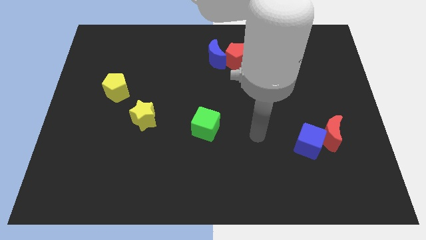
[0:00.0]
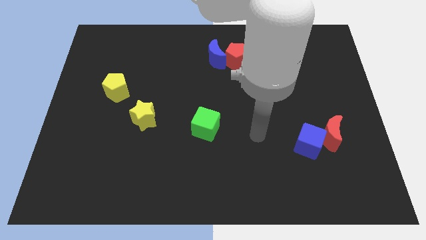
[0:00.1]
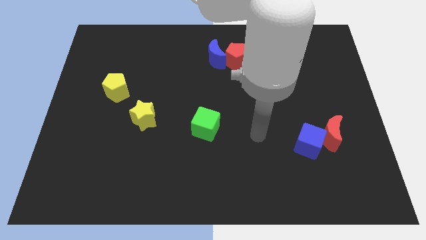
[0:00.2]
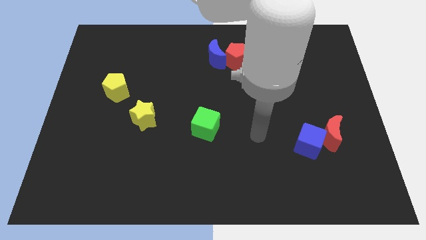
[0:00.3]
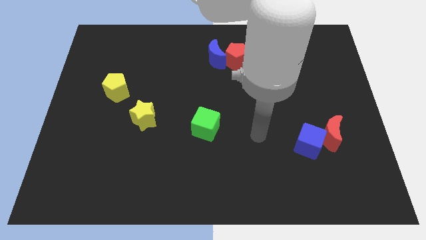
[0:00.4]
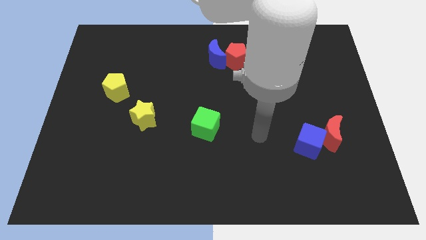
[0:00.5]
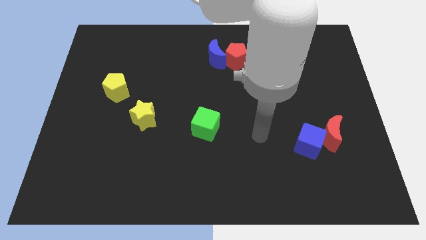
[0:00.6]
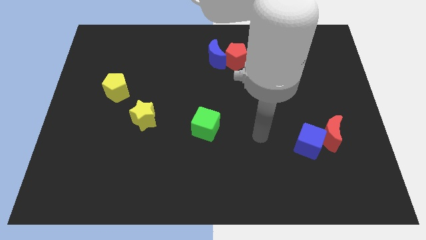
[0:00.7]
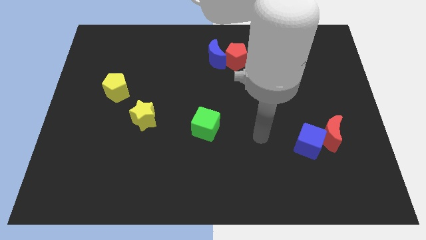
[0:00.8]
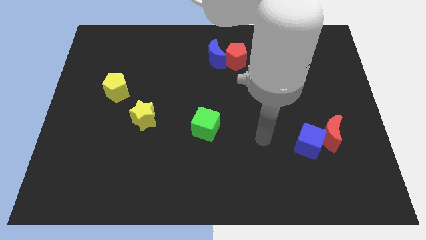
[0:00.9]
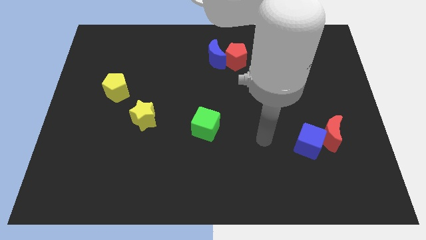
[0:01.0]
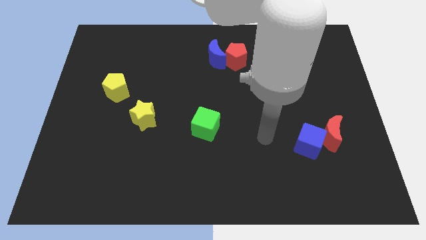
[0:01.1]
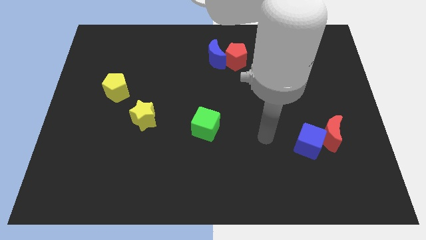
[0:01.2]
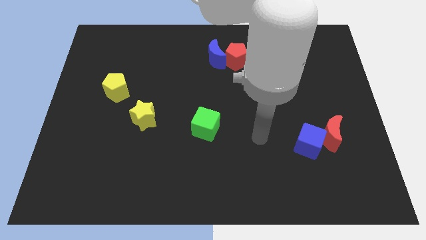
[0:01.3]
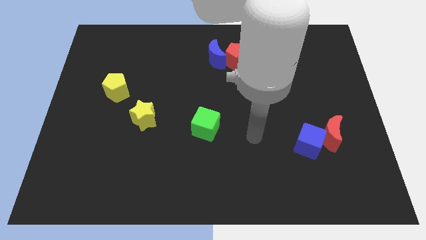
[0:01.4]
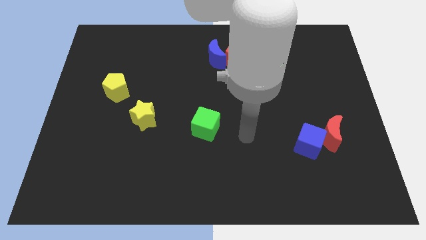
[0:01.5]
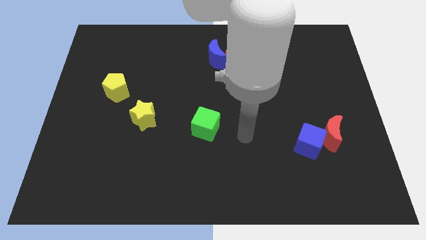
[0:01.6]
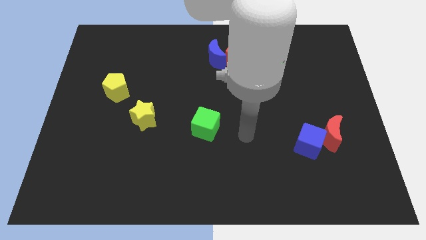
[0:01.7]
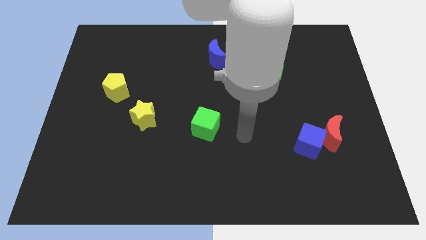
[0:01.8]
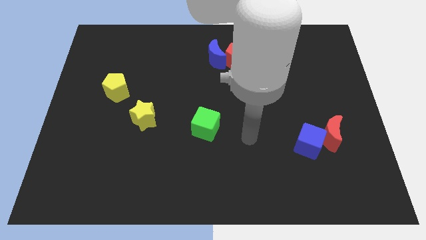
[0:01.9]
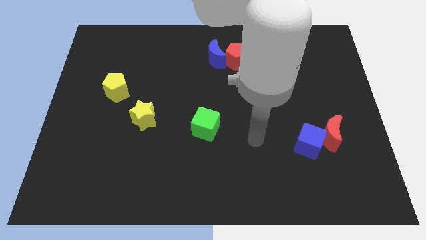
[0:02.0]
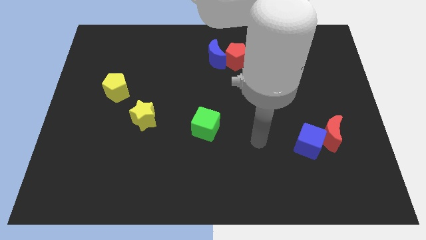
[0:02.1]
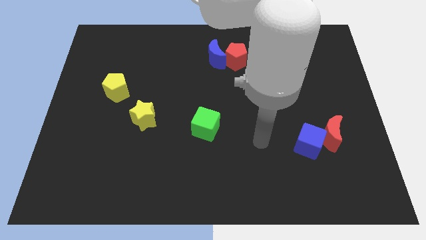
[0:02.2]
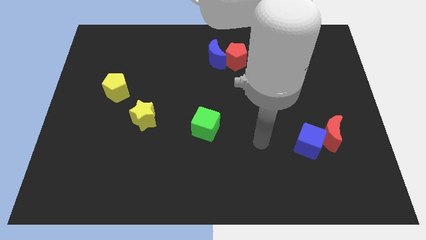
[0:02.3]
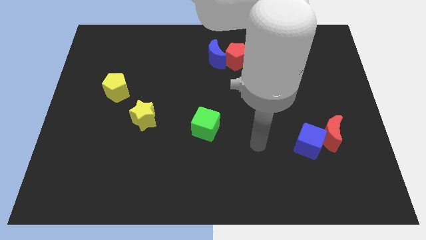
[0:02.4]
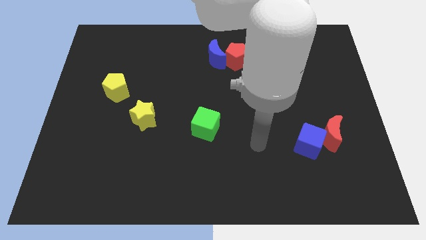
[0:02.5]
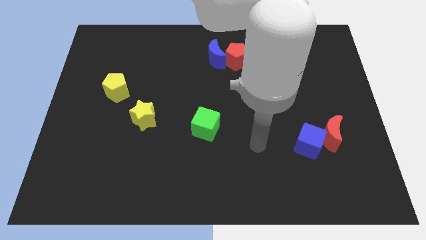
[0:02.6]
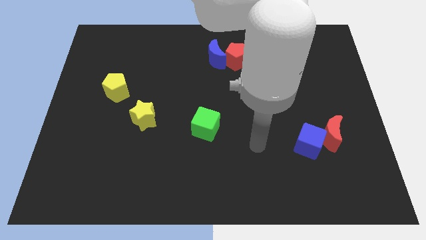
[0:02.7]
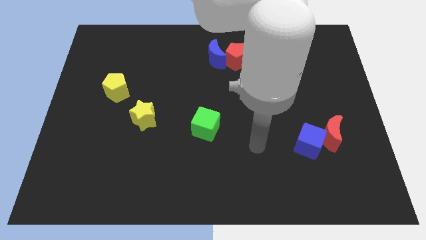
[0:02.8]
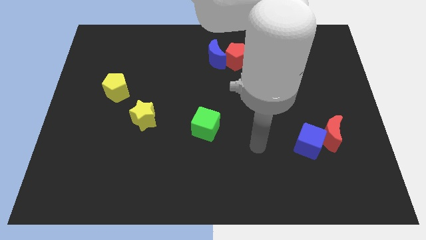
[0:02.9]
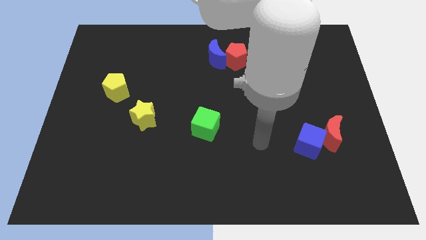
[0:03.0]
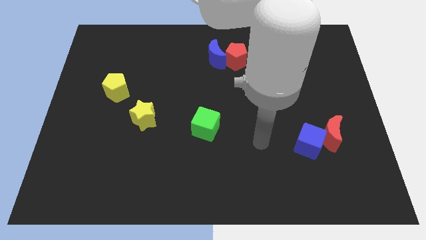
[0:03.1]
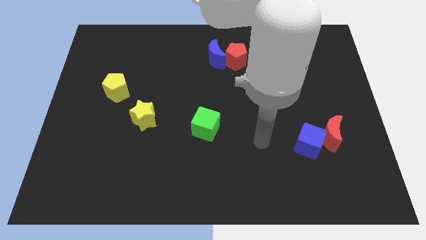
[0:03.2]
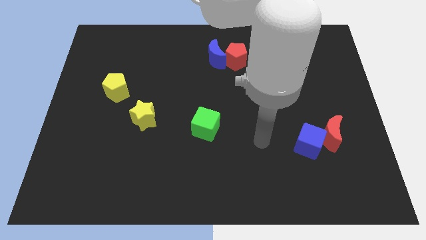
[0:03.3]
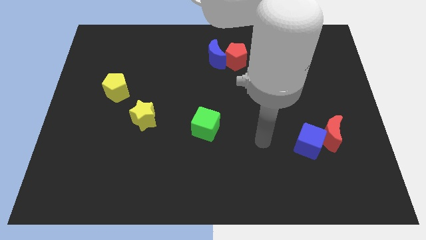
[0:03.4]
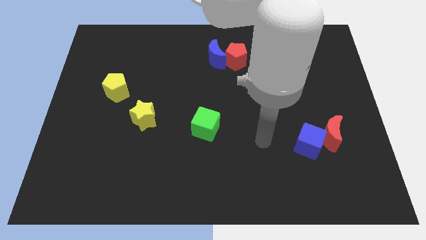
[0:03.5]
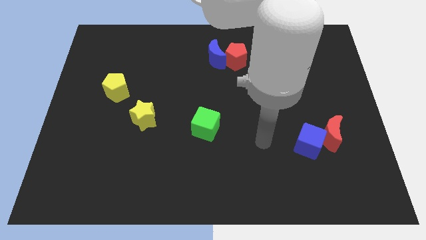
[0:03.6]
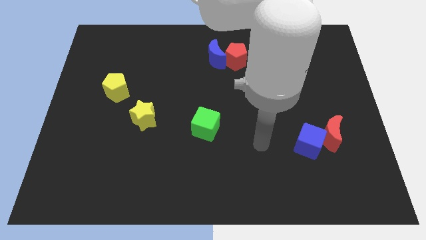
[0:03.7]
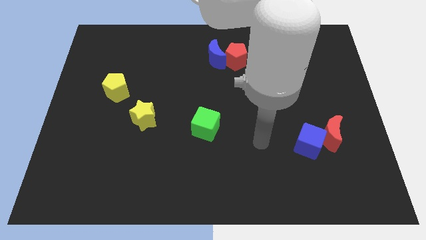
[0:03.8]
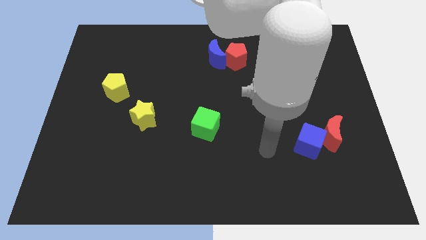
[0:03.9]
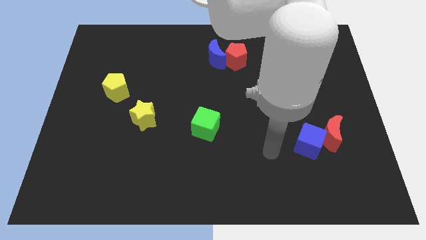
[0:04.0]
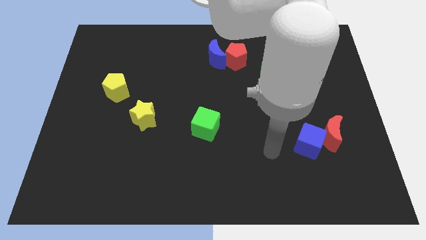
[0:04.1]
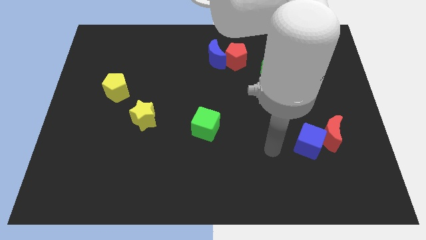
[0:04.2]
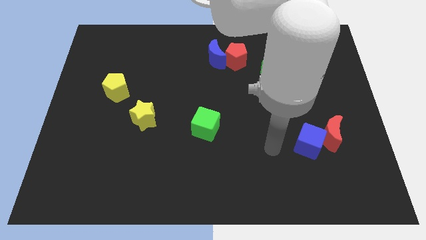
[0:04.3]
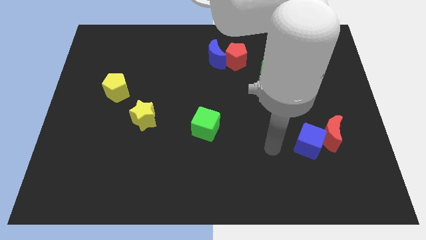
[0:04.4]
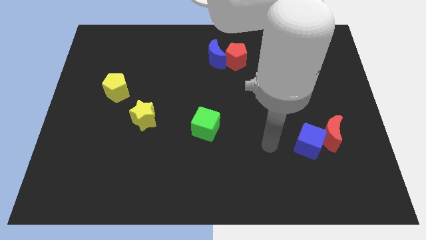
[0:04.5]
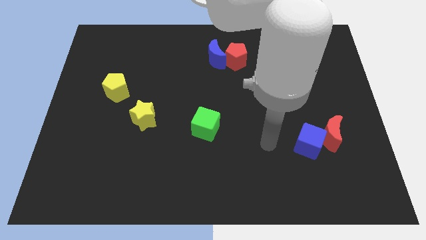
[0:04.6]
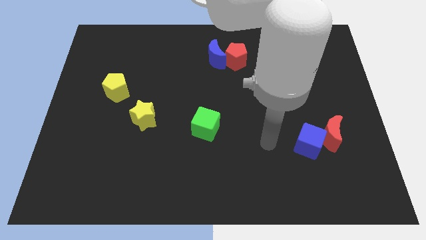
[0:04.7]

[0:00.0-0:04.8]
move arm in between the green cube and blue cube

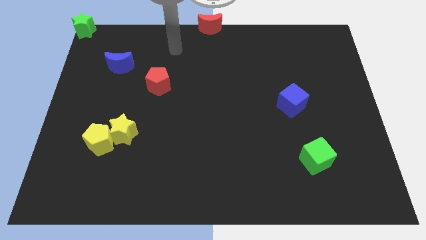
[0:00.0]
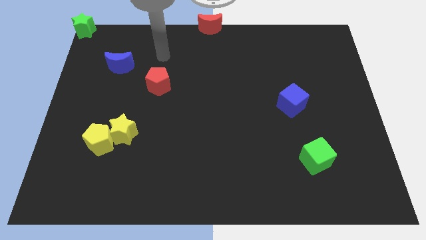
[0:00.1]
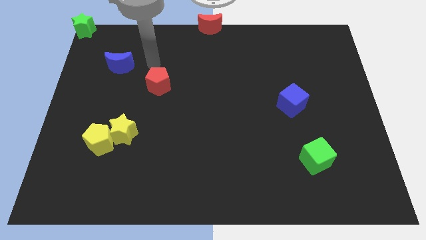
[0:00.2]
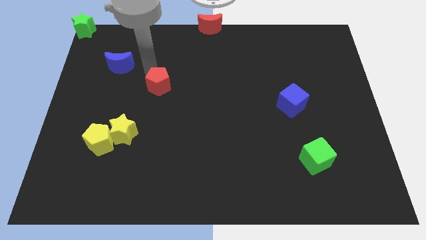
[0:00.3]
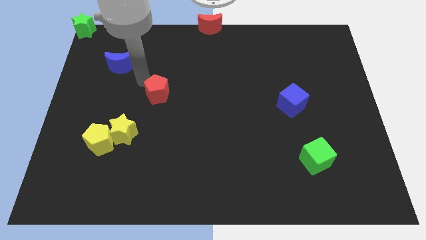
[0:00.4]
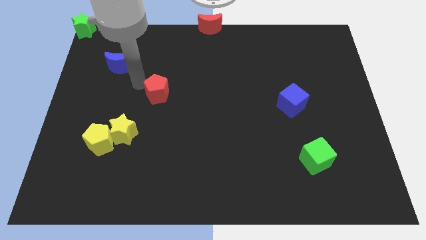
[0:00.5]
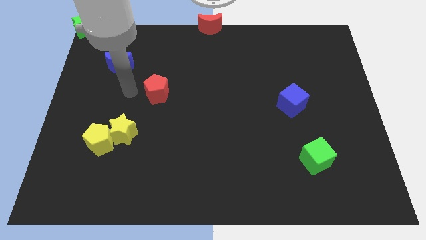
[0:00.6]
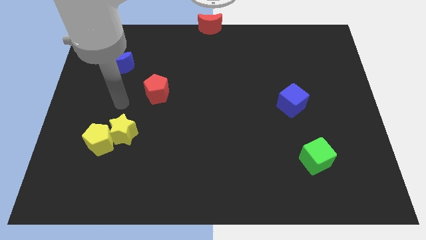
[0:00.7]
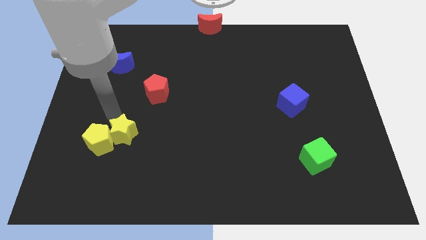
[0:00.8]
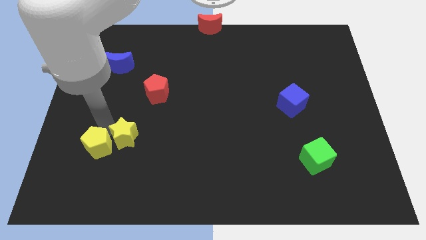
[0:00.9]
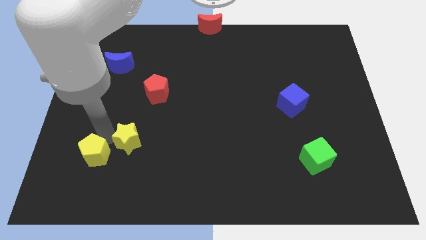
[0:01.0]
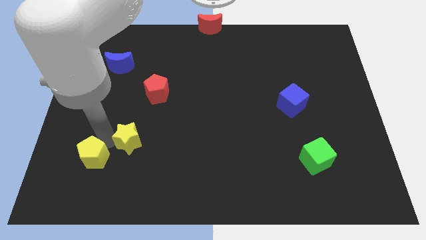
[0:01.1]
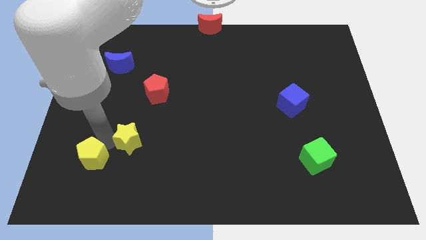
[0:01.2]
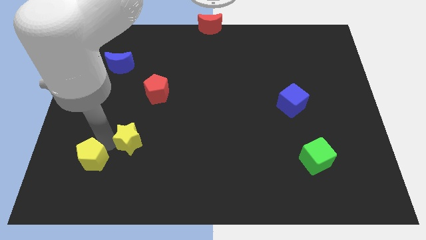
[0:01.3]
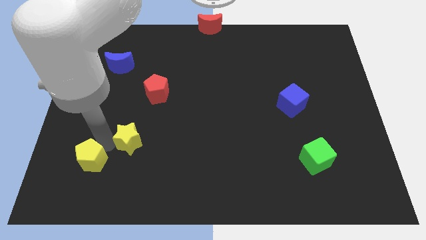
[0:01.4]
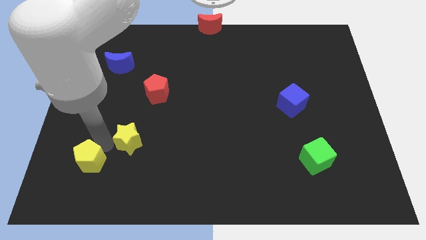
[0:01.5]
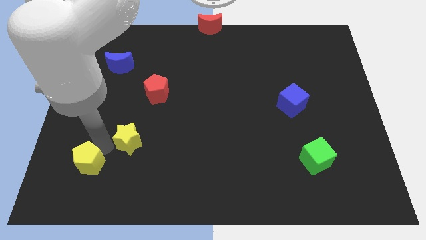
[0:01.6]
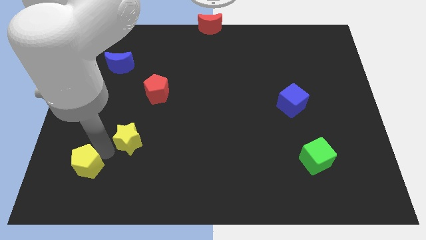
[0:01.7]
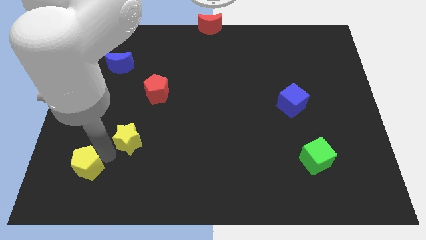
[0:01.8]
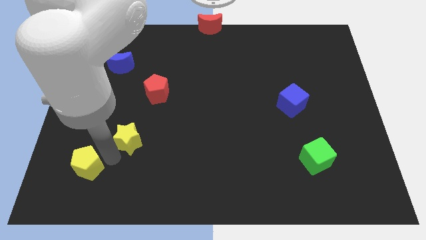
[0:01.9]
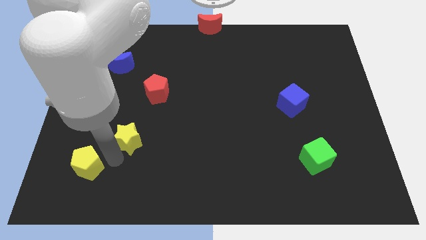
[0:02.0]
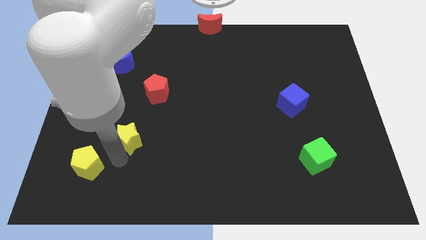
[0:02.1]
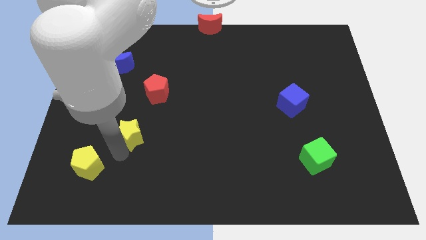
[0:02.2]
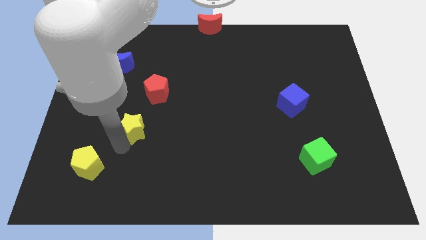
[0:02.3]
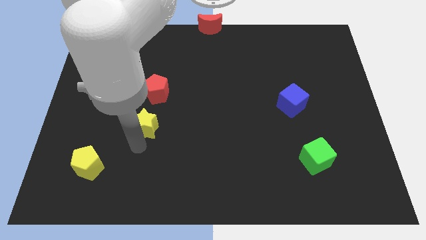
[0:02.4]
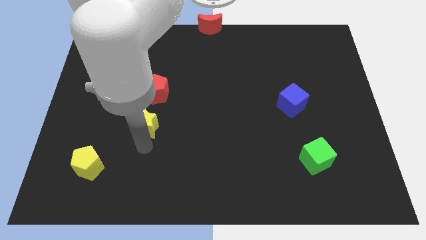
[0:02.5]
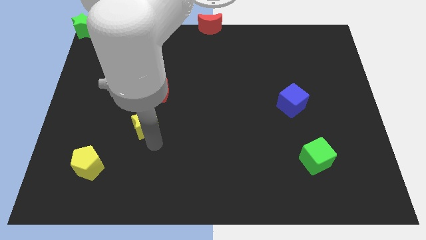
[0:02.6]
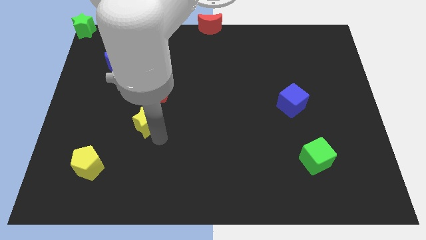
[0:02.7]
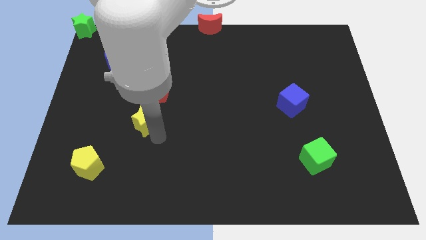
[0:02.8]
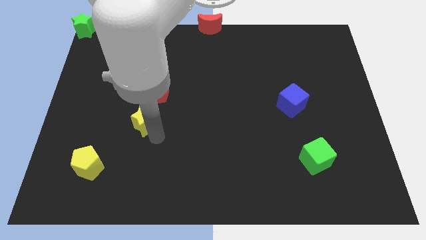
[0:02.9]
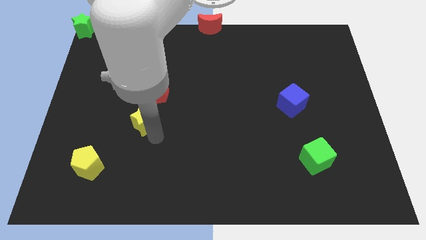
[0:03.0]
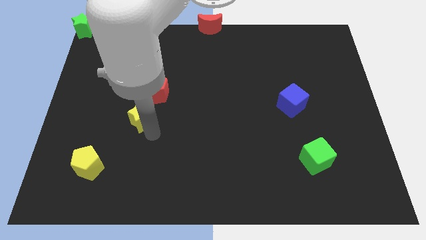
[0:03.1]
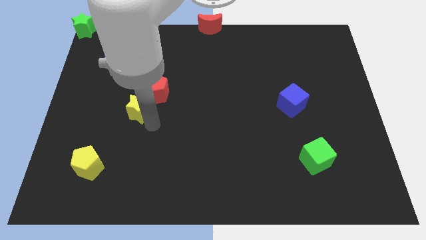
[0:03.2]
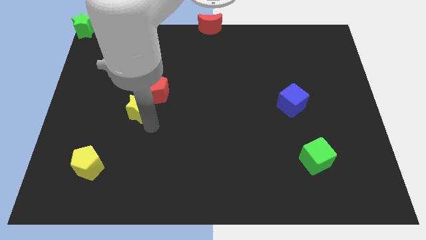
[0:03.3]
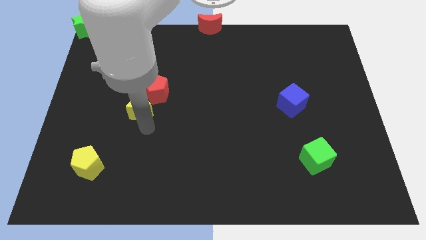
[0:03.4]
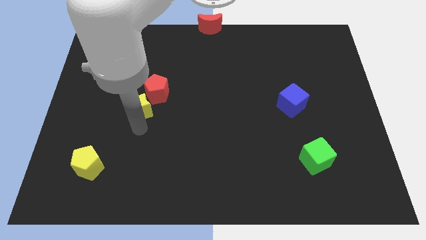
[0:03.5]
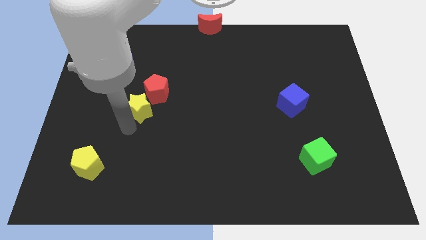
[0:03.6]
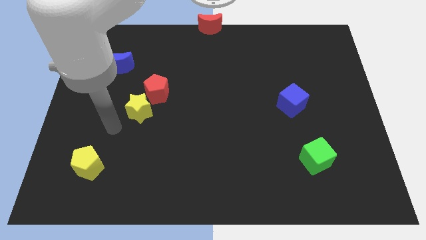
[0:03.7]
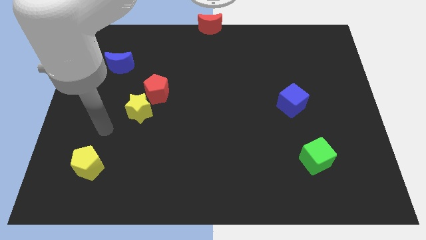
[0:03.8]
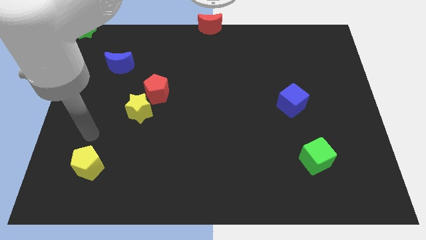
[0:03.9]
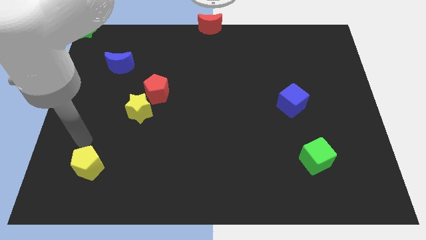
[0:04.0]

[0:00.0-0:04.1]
seprate the yellow pentagon and yellow star

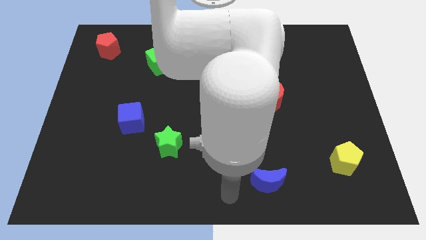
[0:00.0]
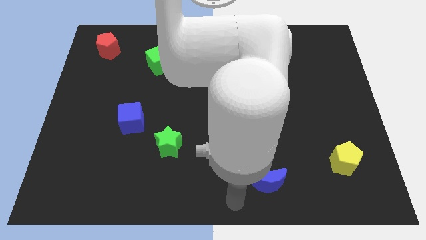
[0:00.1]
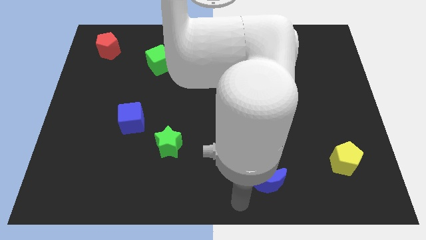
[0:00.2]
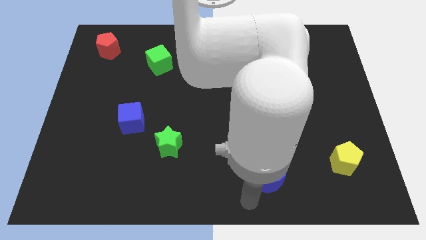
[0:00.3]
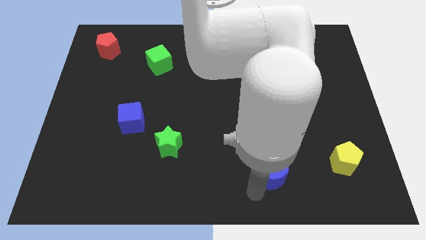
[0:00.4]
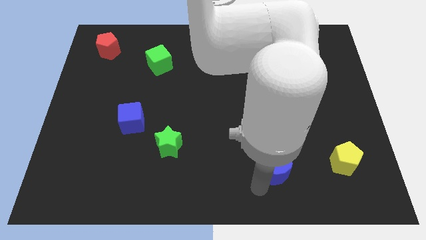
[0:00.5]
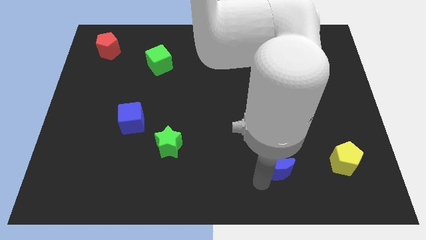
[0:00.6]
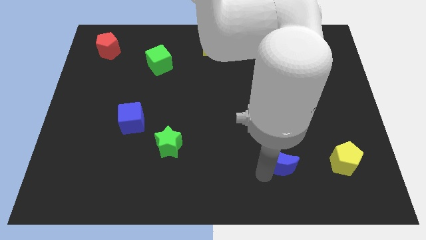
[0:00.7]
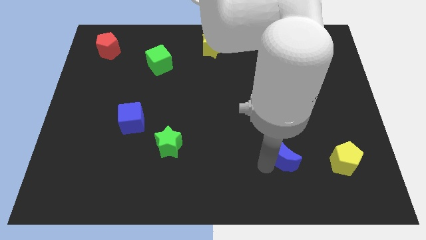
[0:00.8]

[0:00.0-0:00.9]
place the blue crescent horizontally to the left side of the yellow pentagon
